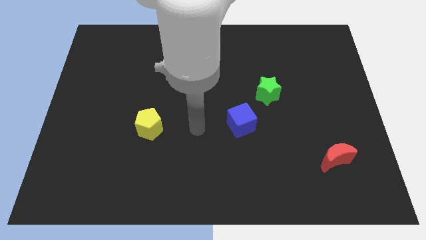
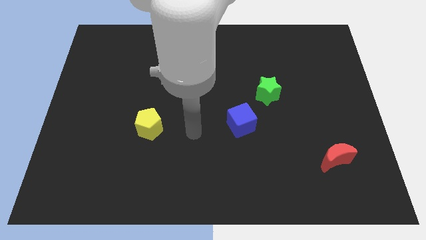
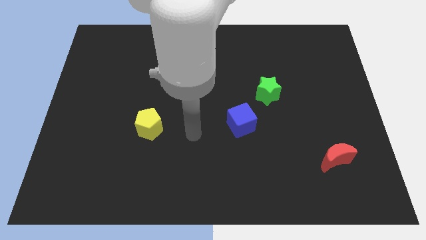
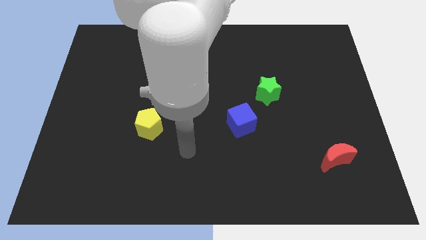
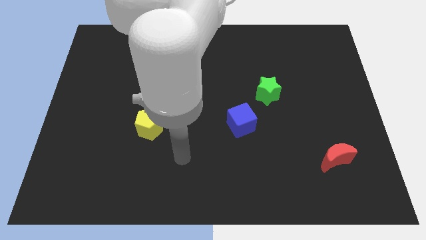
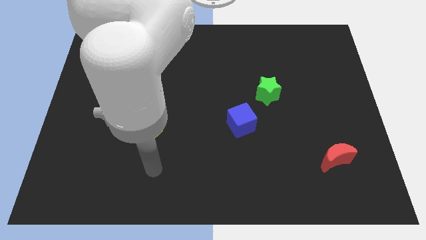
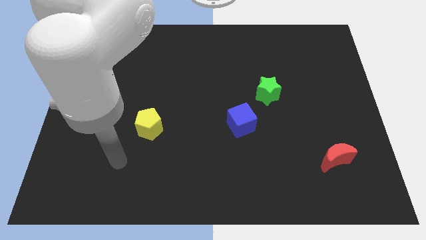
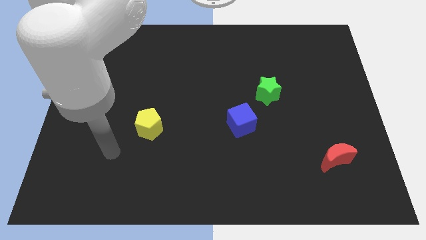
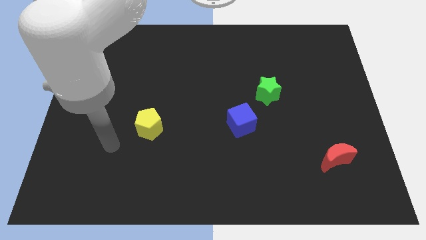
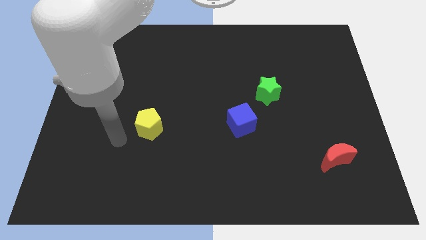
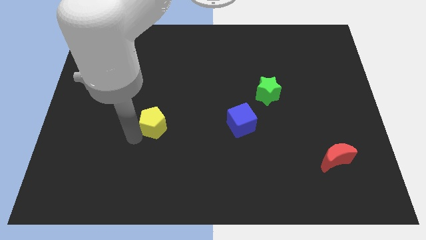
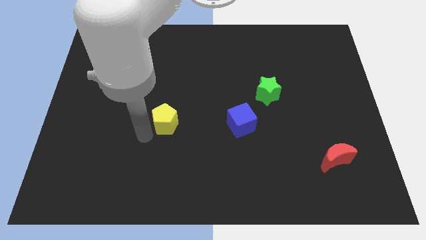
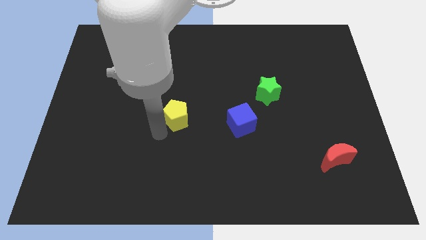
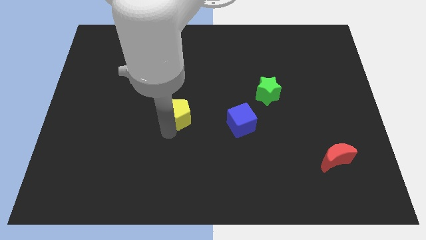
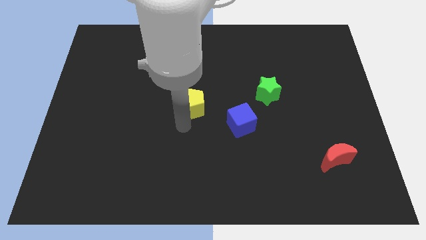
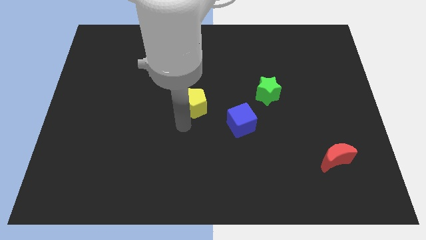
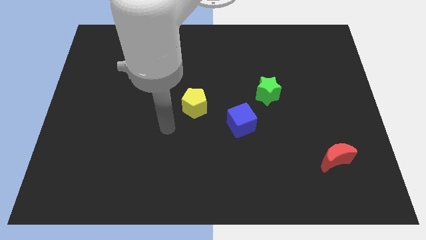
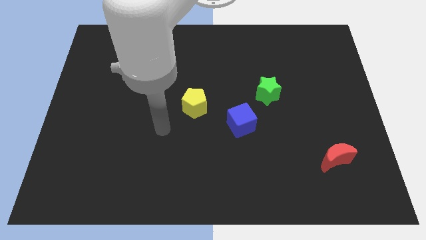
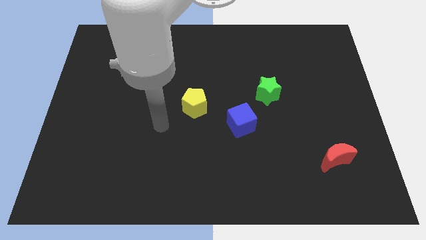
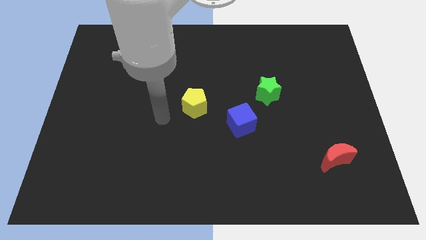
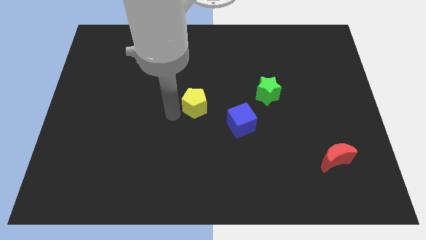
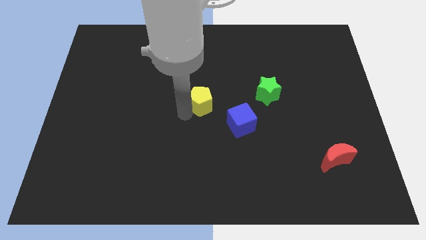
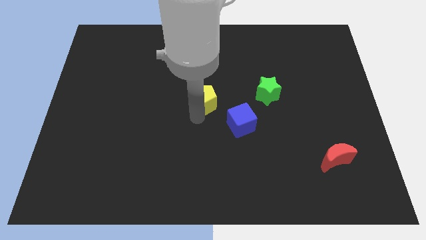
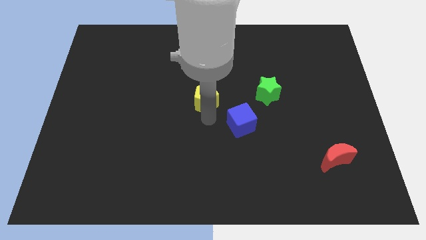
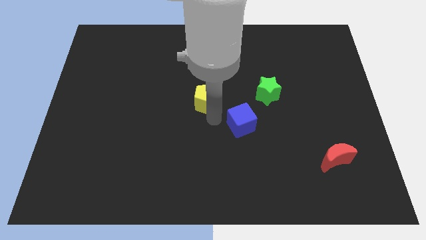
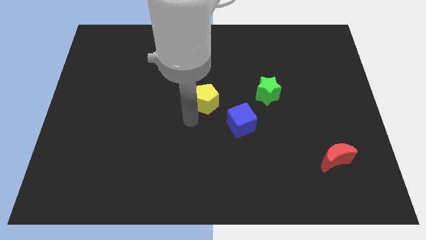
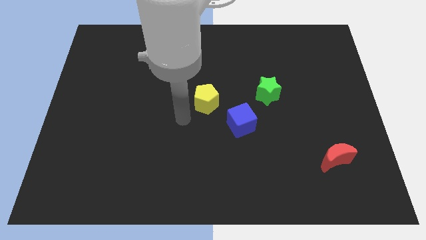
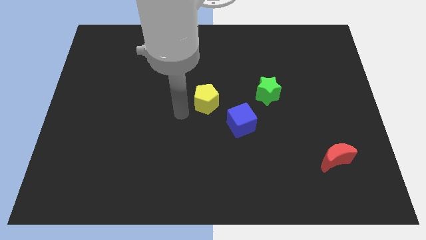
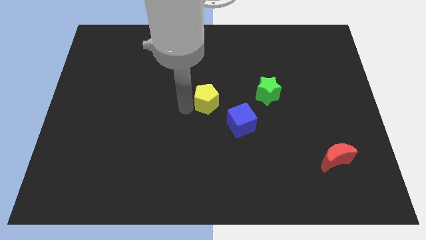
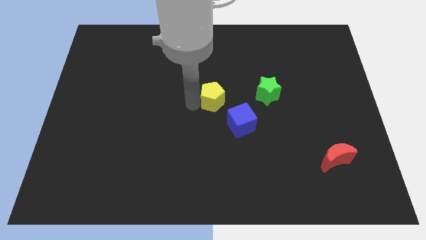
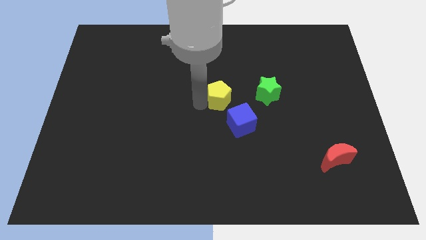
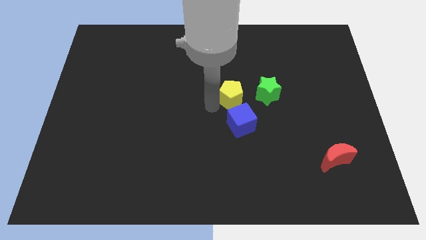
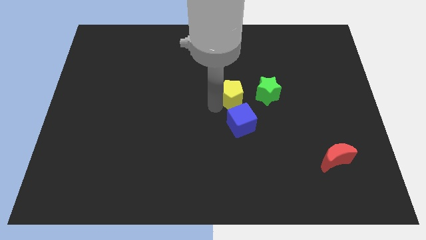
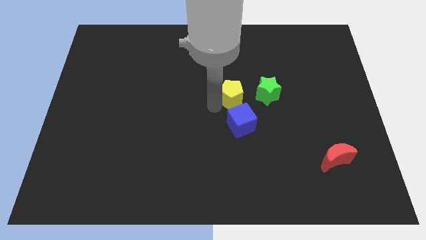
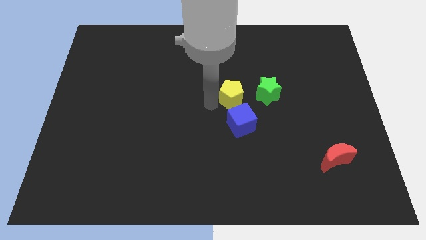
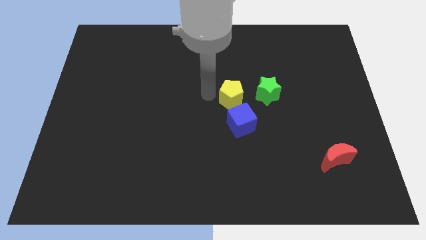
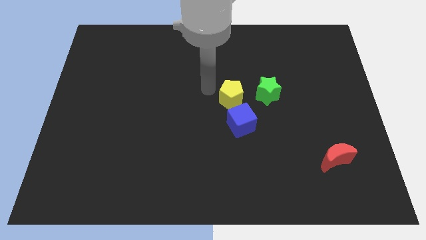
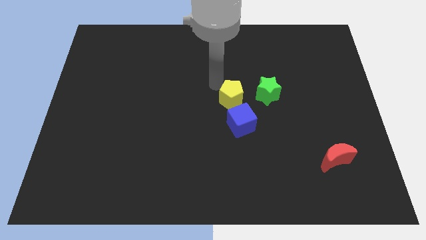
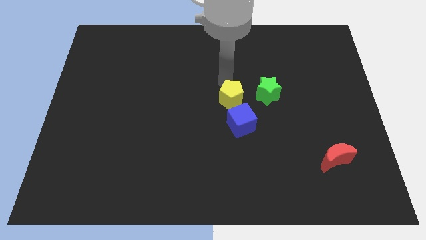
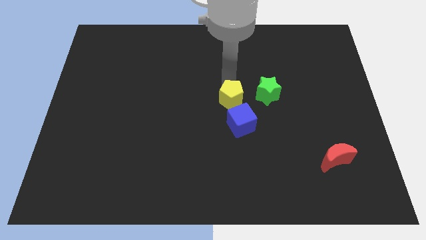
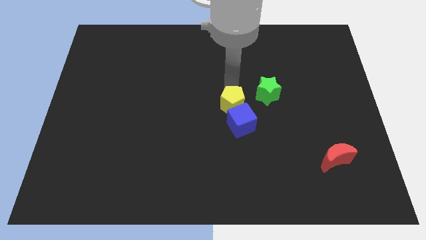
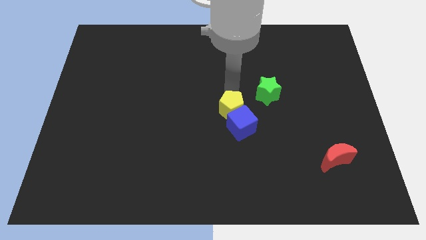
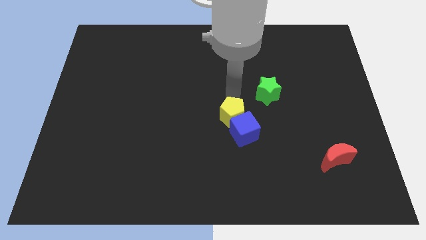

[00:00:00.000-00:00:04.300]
slide the yellow pentagon next to the blue block

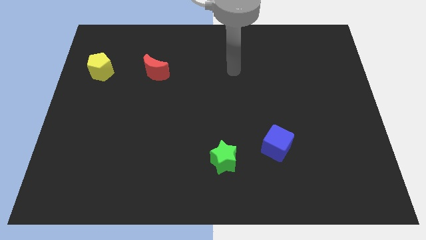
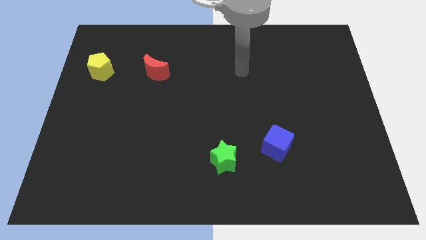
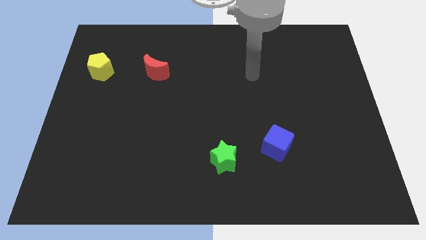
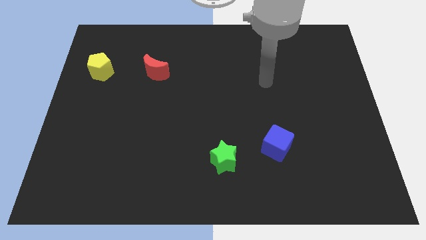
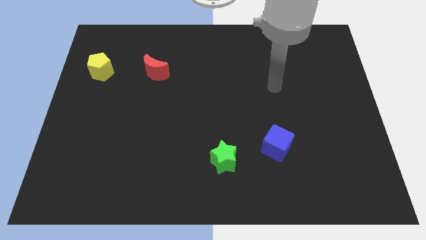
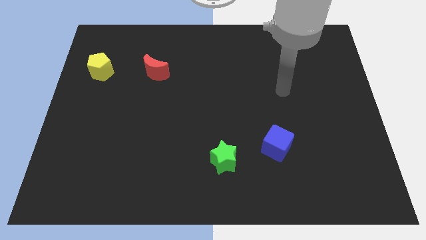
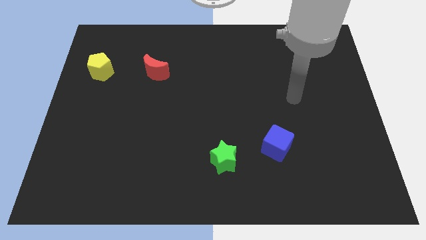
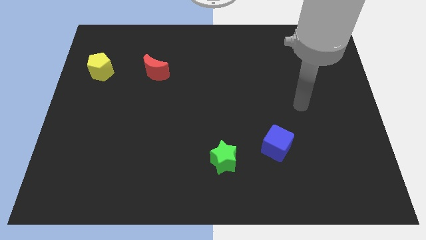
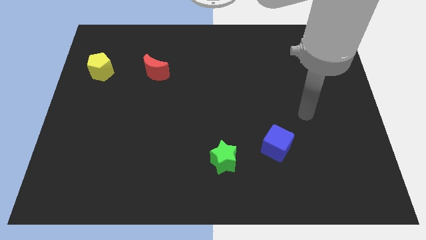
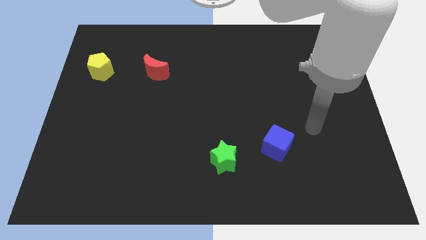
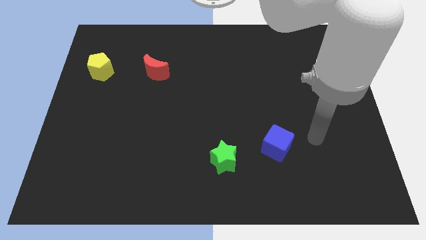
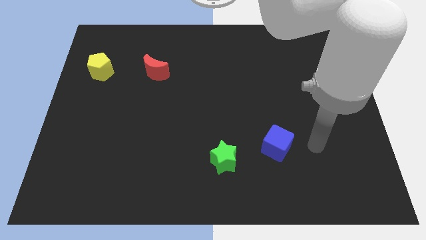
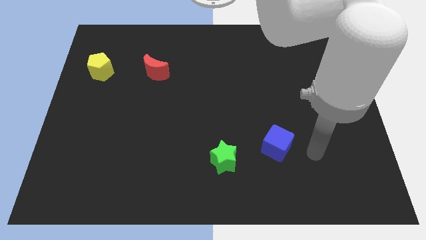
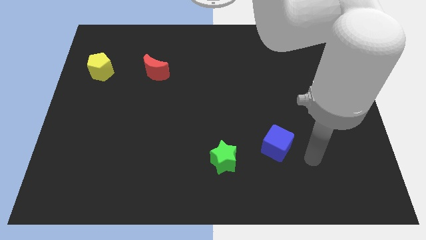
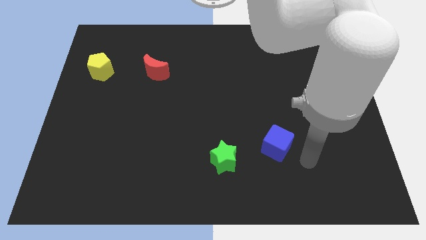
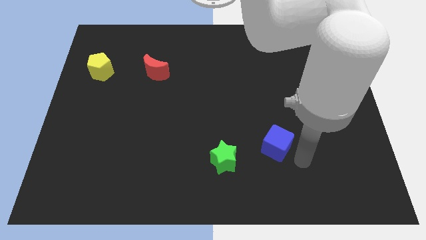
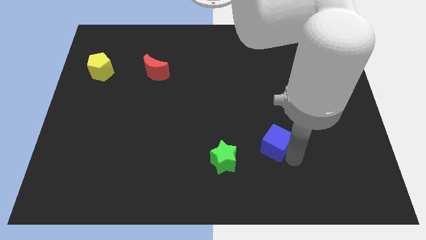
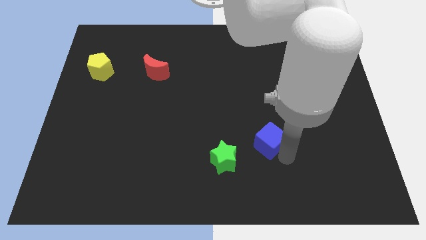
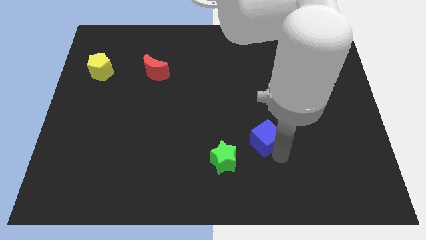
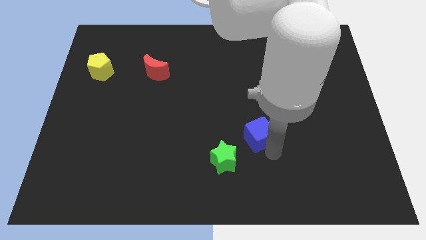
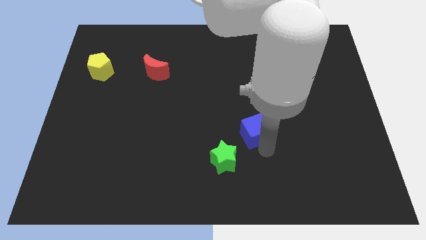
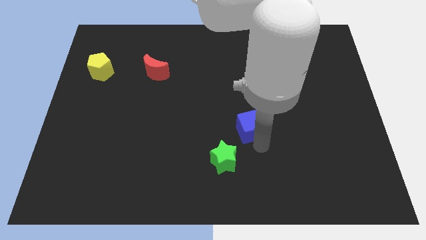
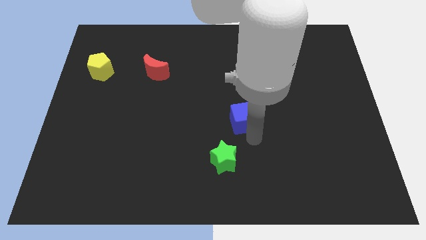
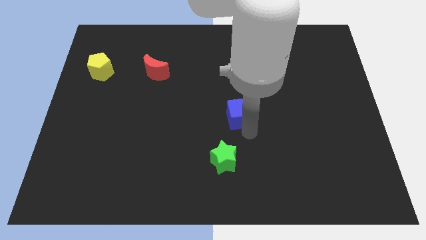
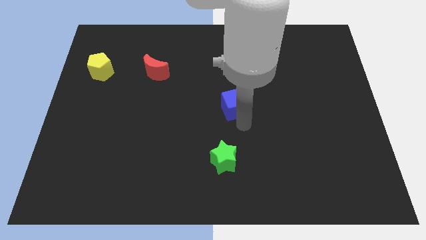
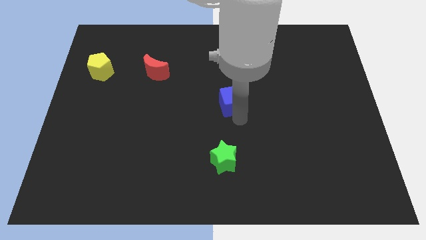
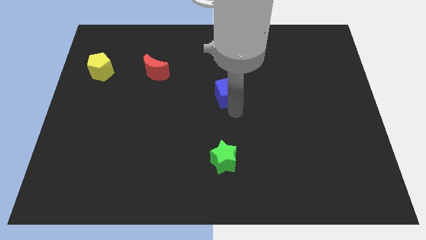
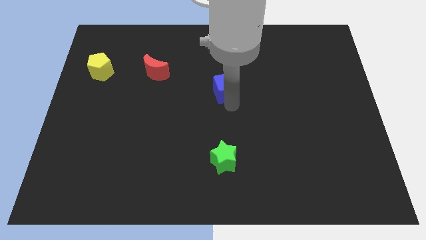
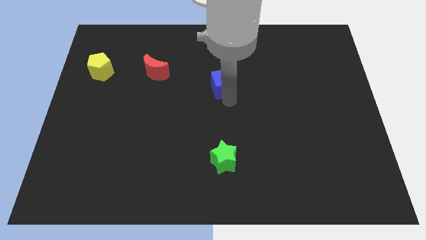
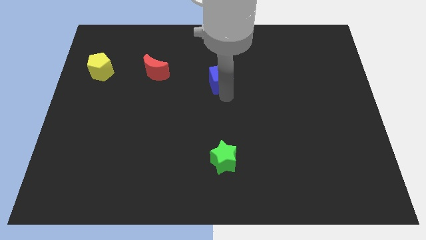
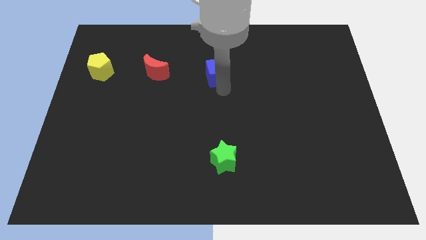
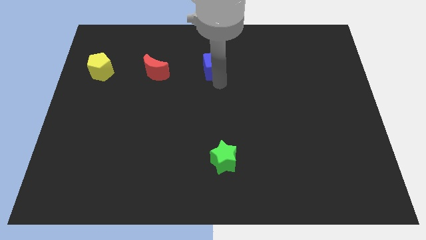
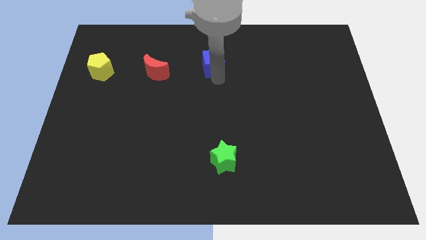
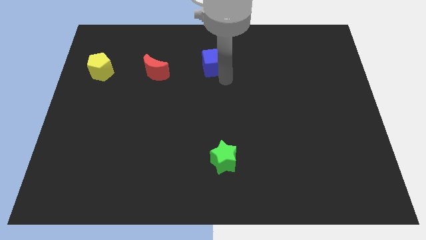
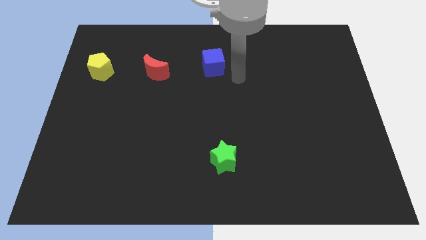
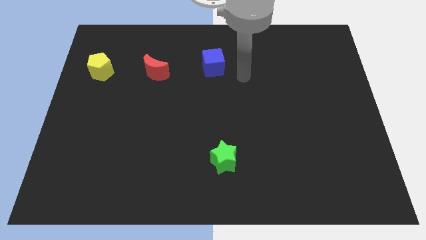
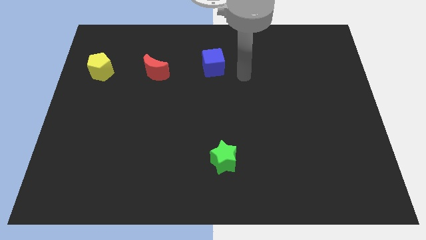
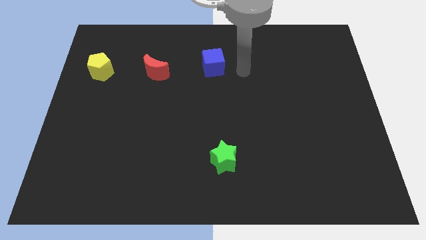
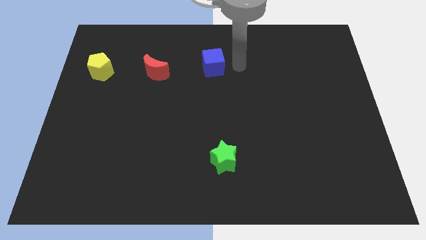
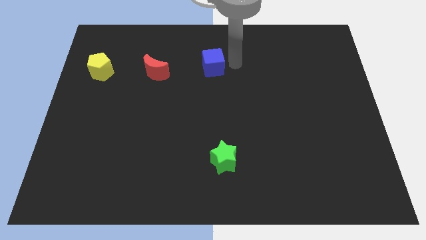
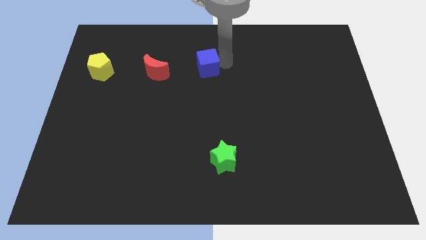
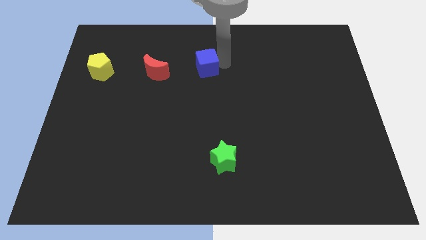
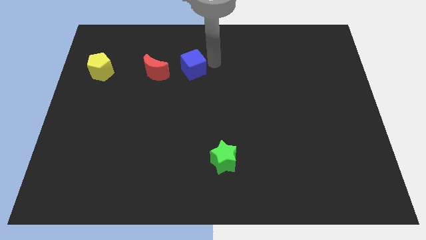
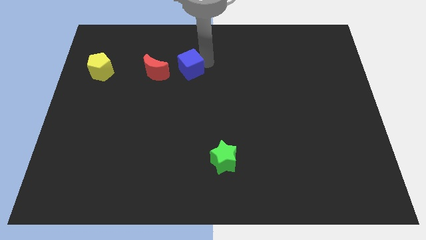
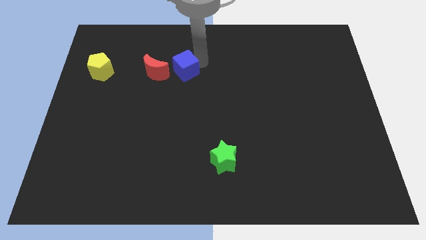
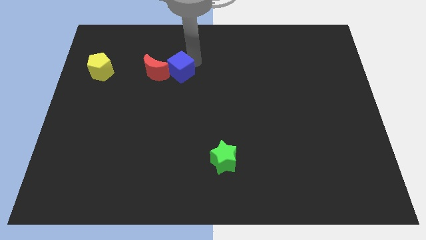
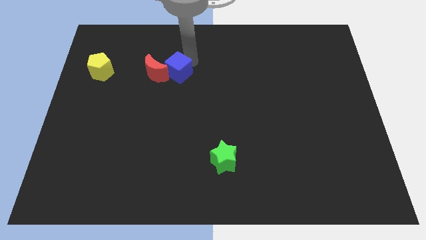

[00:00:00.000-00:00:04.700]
slide the blue block next to the red moon
